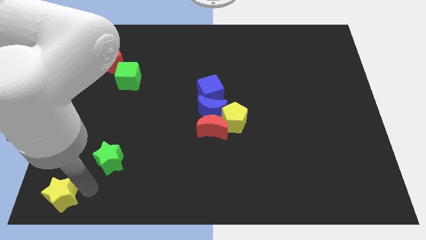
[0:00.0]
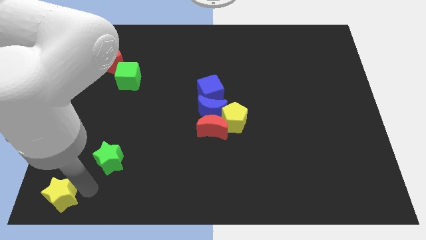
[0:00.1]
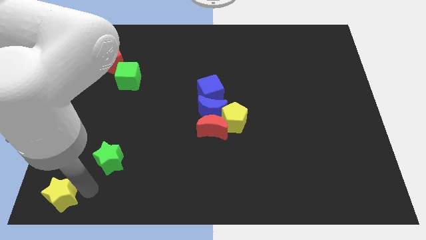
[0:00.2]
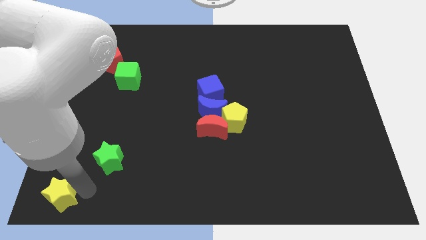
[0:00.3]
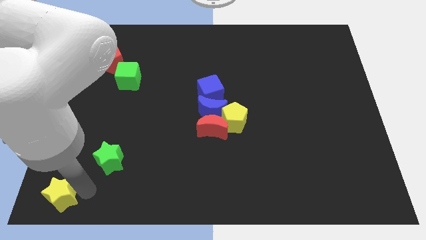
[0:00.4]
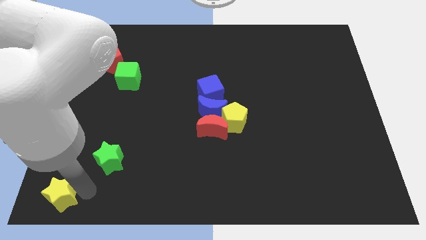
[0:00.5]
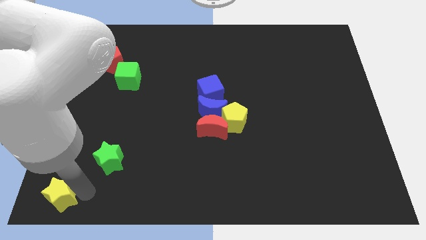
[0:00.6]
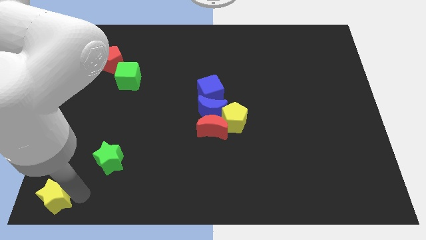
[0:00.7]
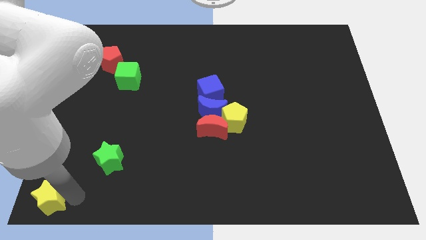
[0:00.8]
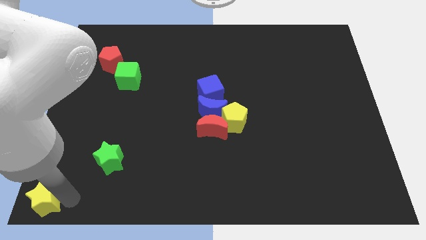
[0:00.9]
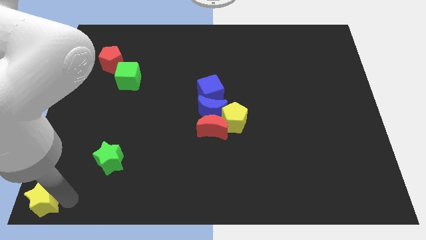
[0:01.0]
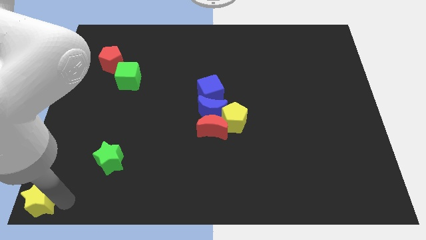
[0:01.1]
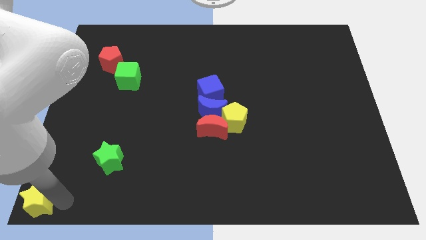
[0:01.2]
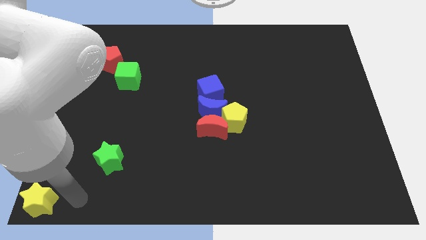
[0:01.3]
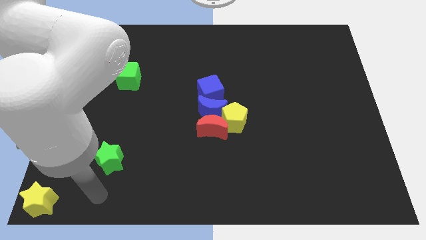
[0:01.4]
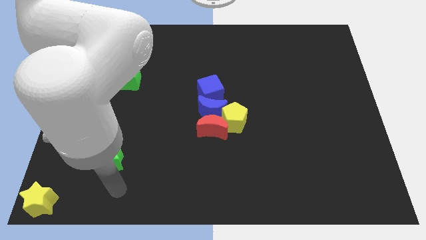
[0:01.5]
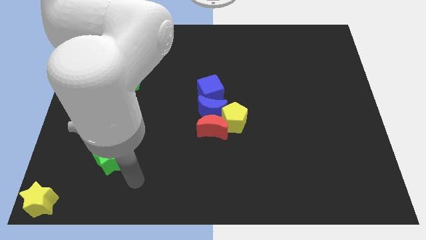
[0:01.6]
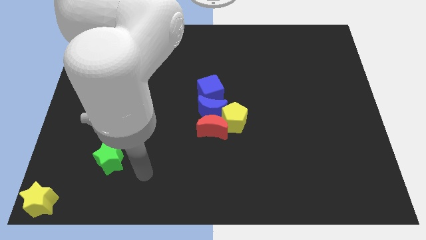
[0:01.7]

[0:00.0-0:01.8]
push the yellow star to the bottom left corner of the board

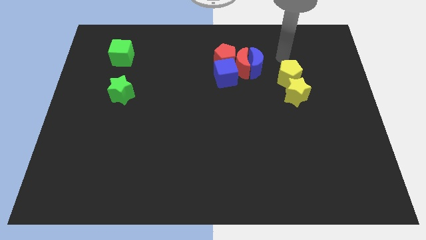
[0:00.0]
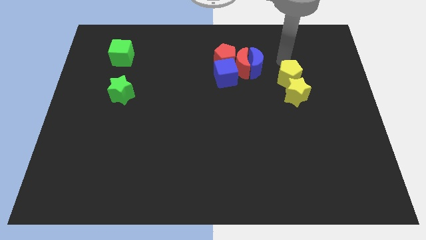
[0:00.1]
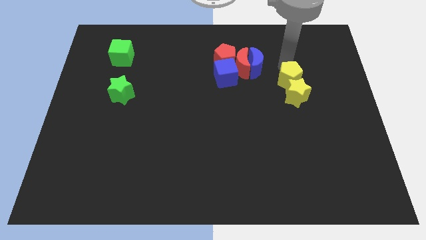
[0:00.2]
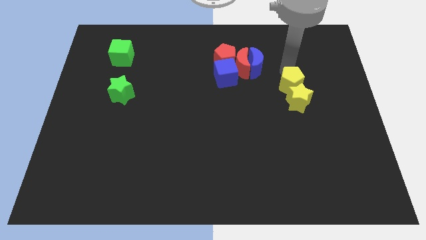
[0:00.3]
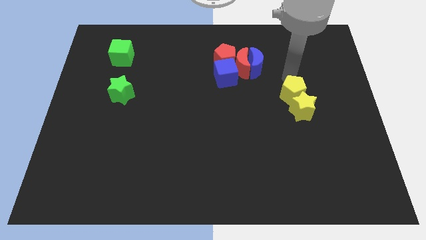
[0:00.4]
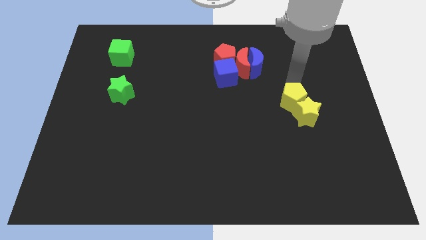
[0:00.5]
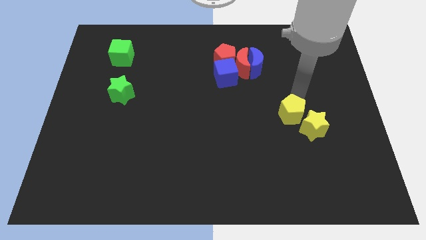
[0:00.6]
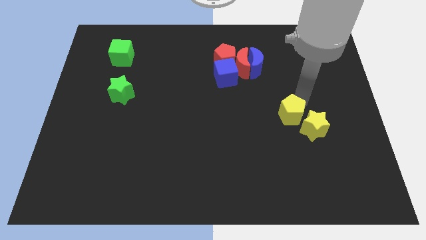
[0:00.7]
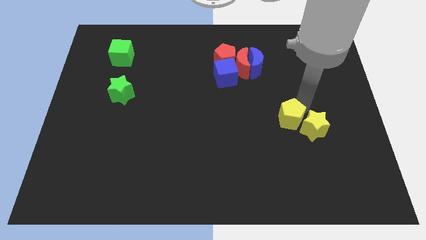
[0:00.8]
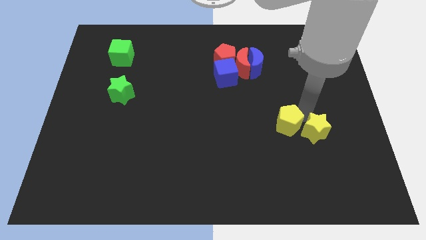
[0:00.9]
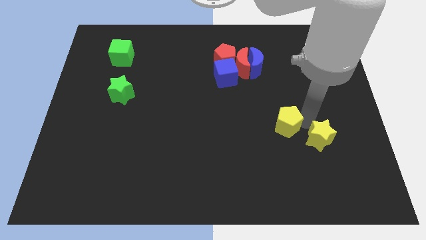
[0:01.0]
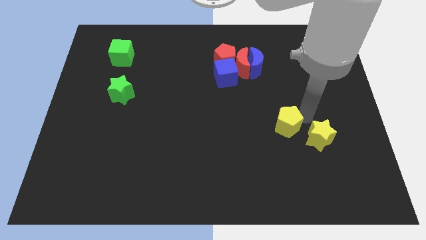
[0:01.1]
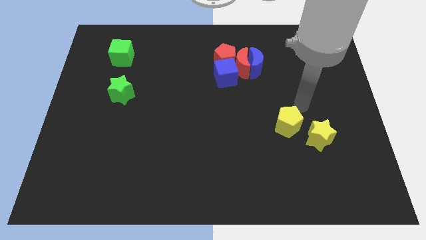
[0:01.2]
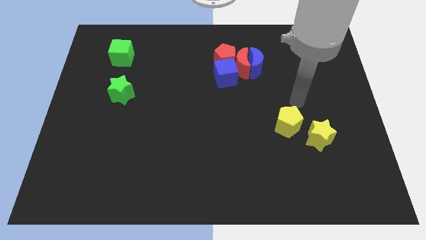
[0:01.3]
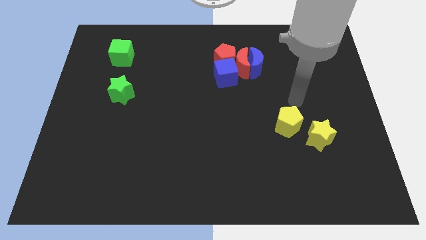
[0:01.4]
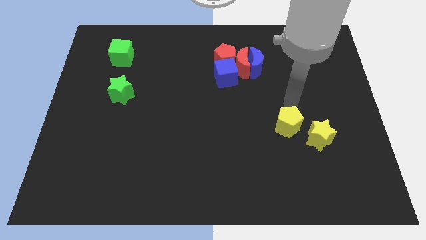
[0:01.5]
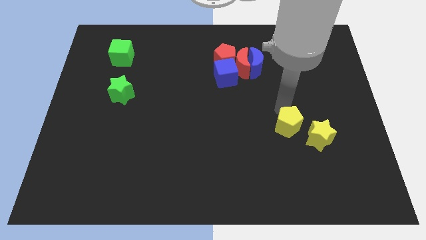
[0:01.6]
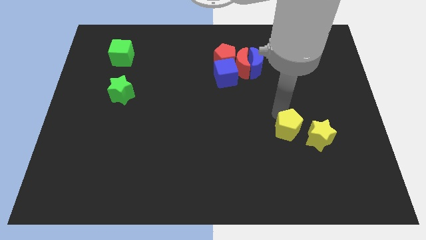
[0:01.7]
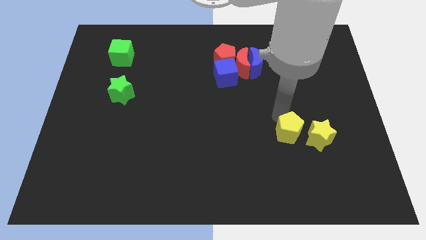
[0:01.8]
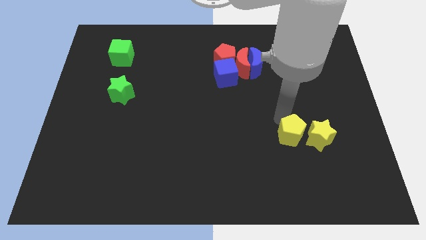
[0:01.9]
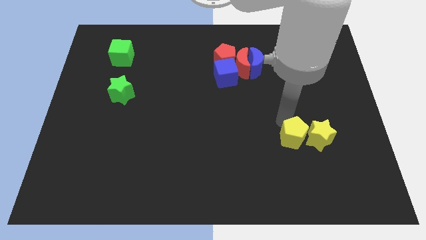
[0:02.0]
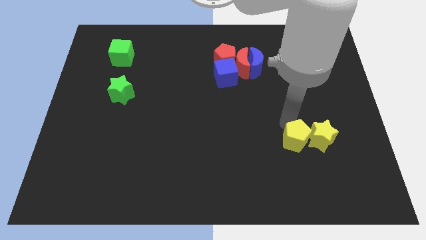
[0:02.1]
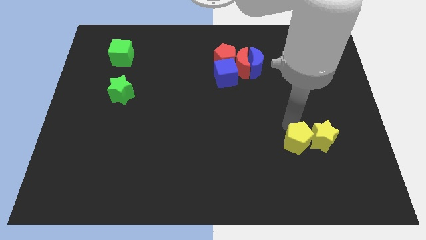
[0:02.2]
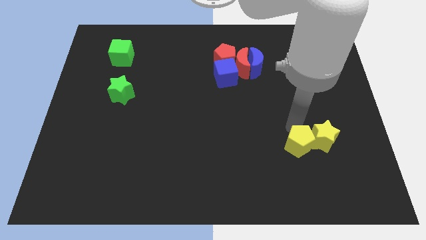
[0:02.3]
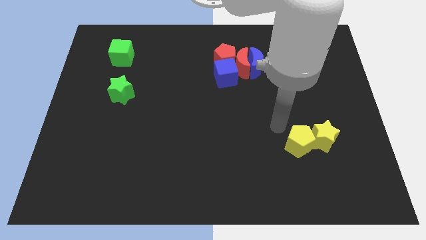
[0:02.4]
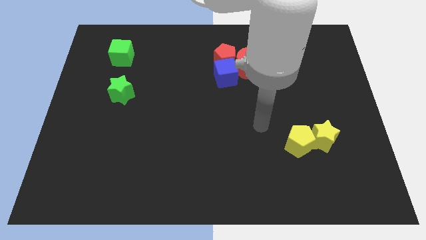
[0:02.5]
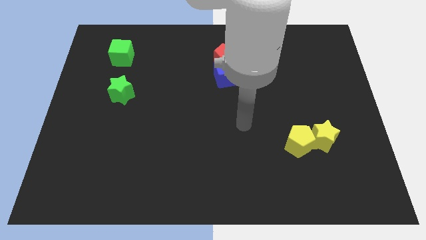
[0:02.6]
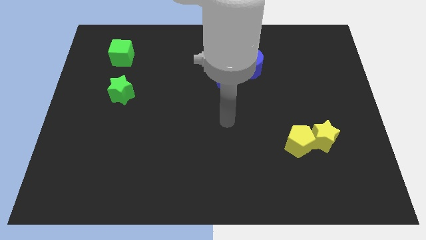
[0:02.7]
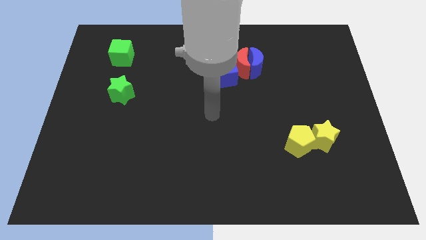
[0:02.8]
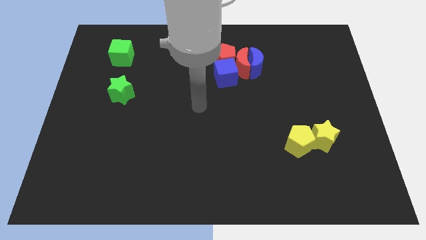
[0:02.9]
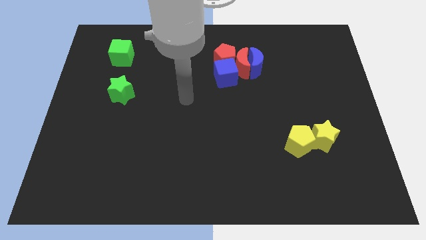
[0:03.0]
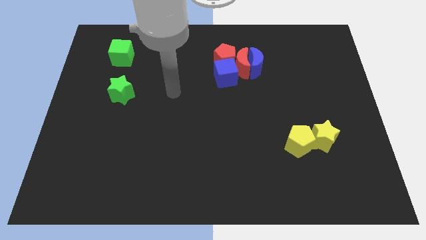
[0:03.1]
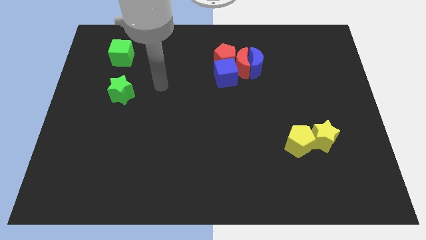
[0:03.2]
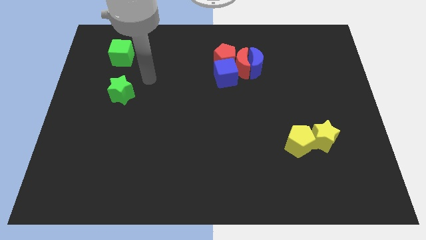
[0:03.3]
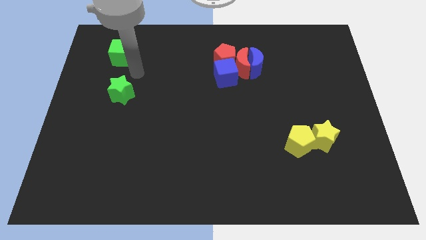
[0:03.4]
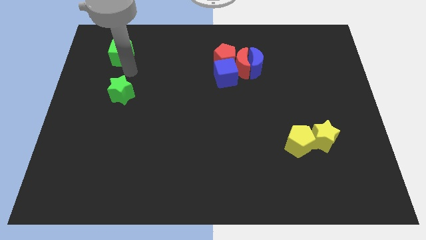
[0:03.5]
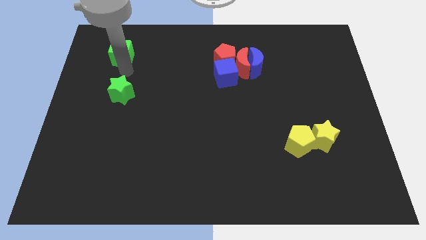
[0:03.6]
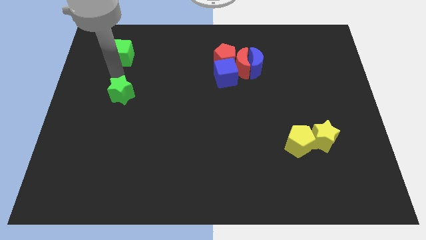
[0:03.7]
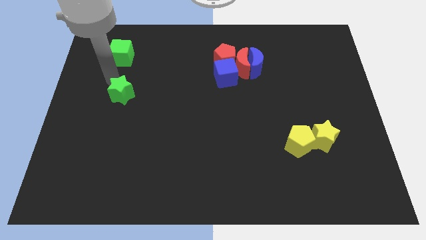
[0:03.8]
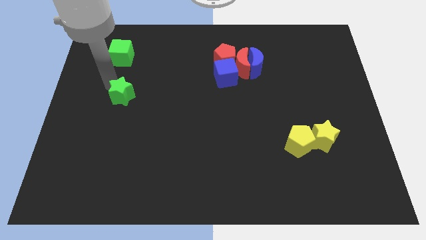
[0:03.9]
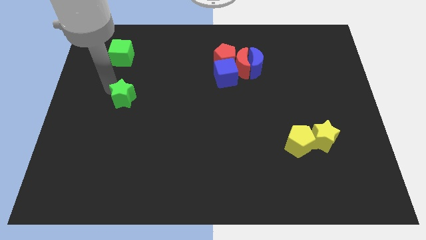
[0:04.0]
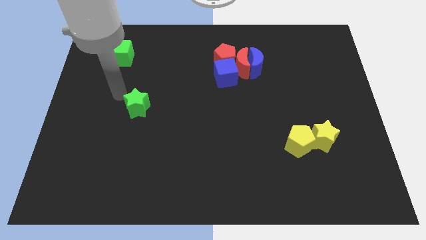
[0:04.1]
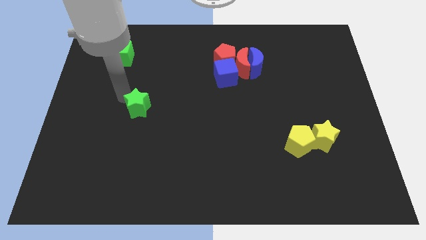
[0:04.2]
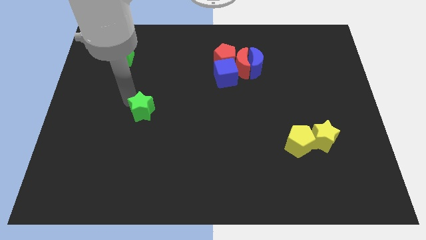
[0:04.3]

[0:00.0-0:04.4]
slide the green star diagonally to the bottom left of the blue cube

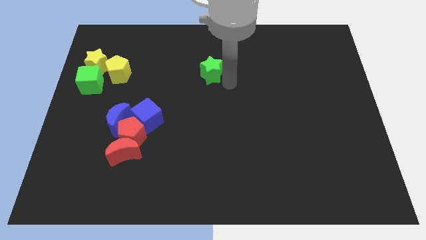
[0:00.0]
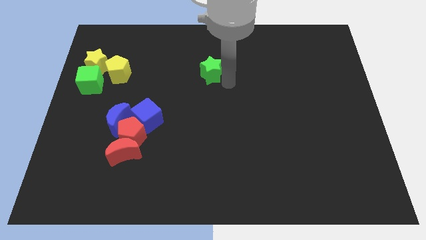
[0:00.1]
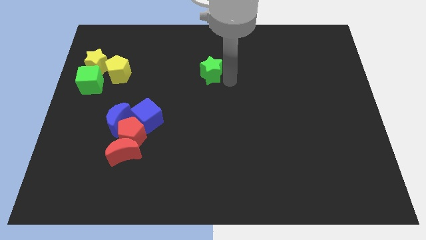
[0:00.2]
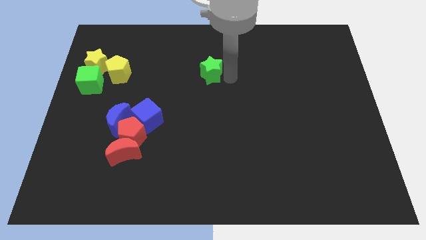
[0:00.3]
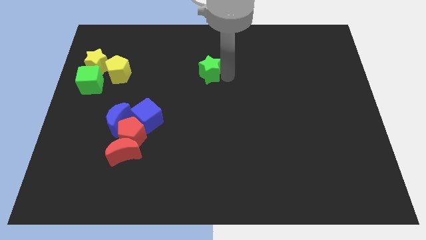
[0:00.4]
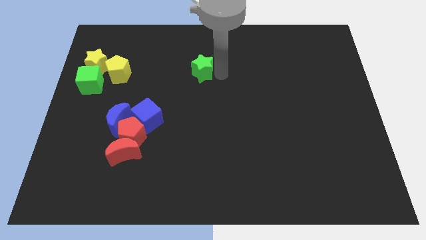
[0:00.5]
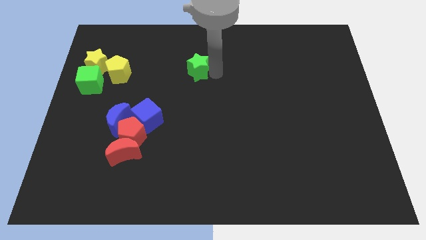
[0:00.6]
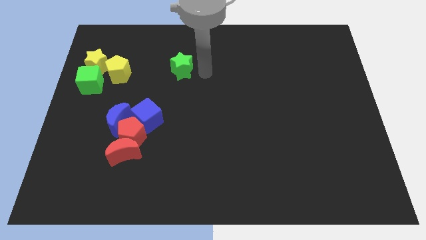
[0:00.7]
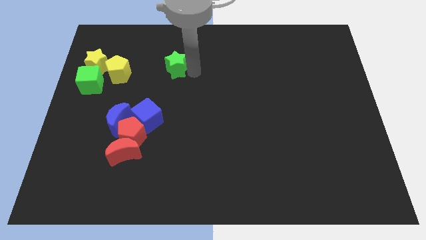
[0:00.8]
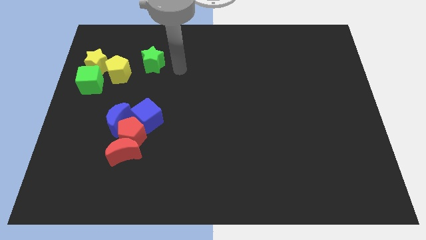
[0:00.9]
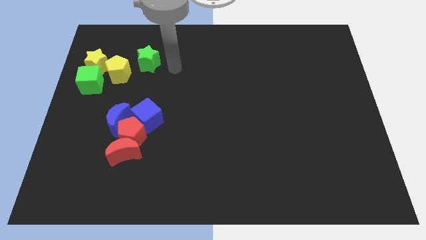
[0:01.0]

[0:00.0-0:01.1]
push green star above blue cube

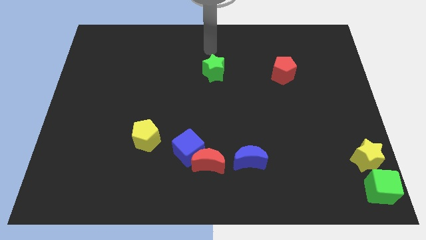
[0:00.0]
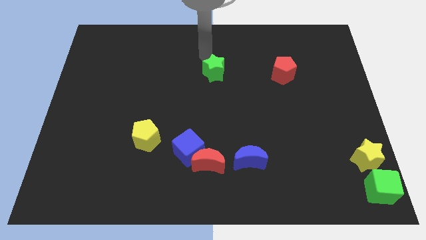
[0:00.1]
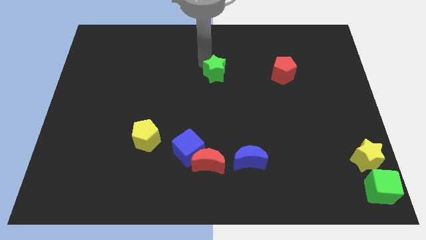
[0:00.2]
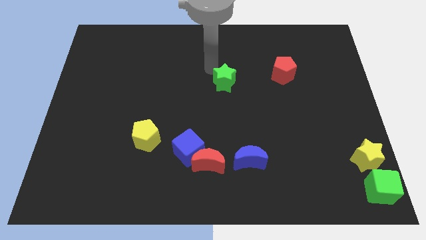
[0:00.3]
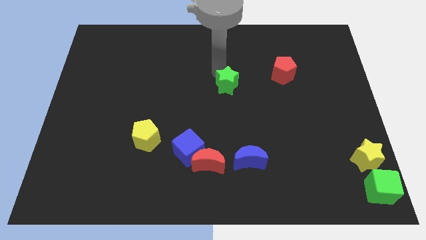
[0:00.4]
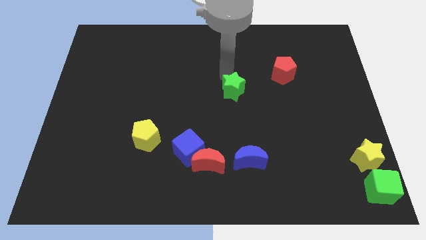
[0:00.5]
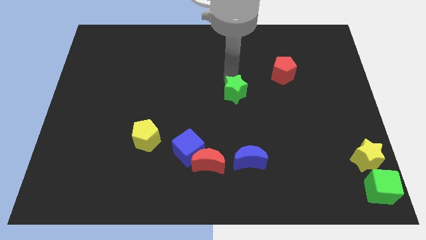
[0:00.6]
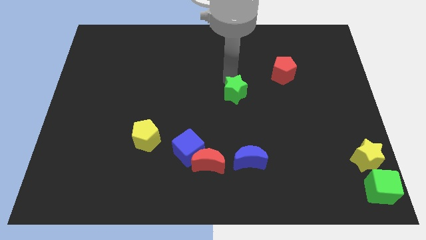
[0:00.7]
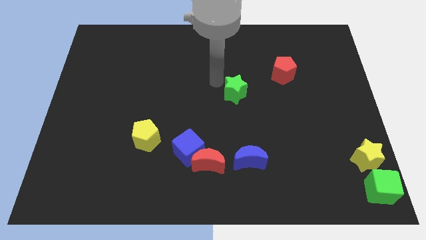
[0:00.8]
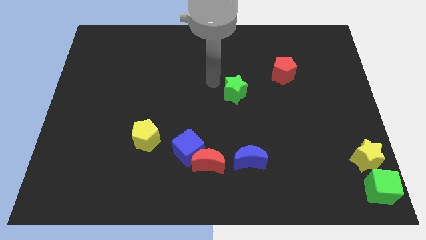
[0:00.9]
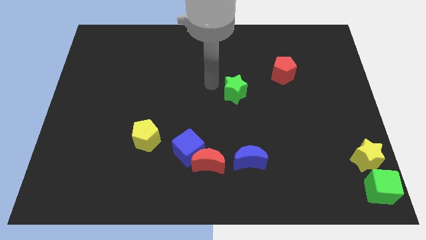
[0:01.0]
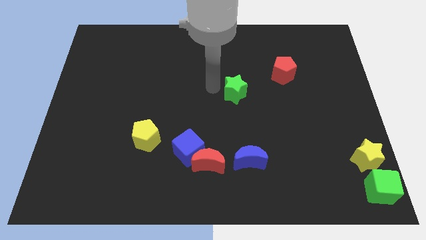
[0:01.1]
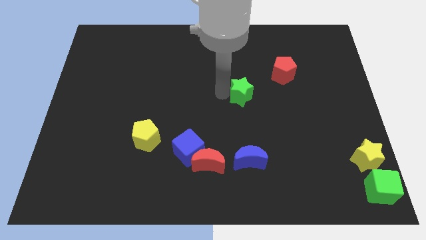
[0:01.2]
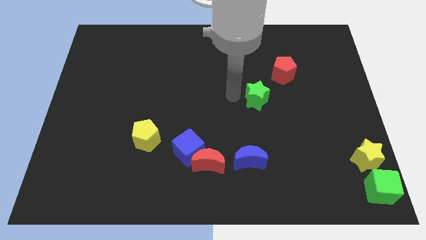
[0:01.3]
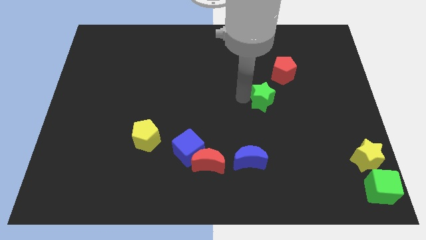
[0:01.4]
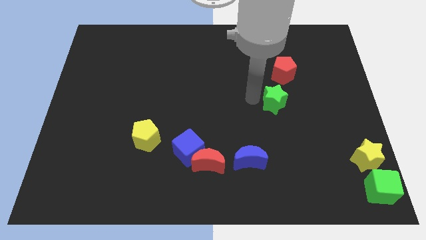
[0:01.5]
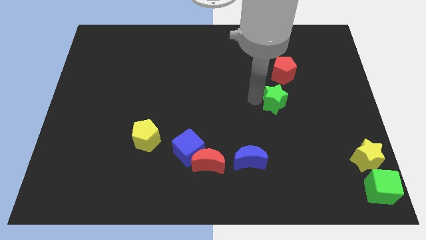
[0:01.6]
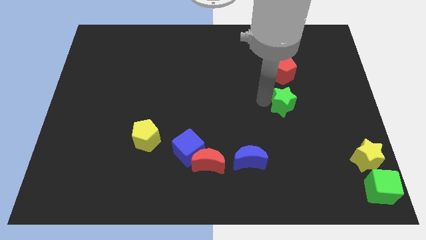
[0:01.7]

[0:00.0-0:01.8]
slide the green star to the bottom left side of the red pentagon
